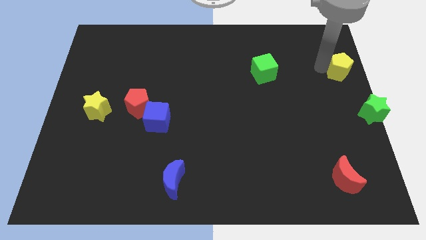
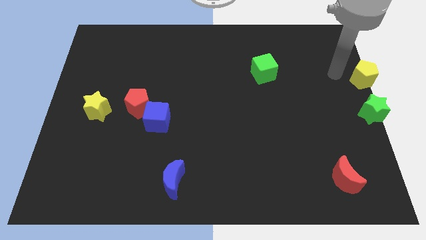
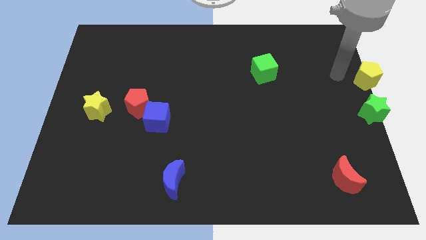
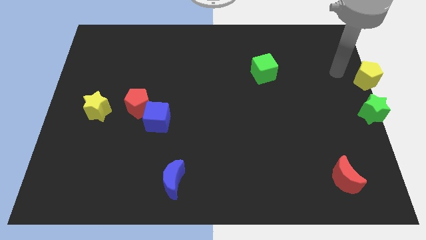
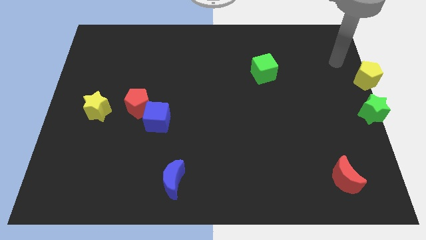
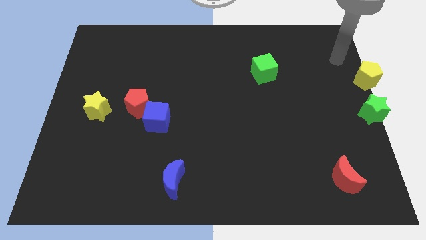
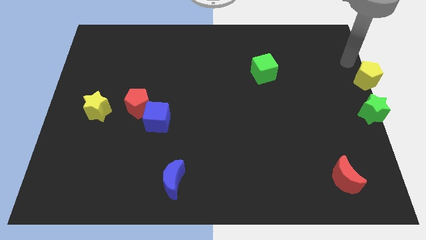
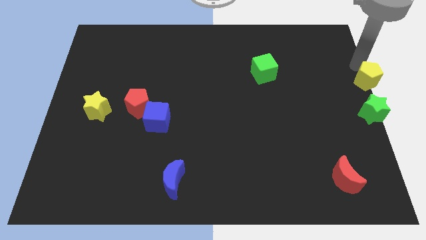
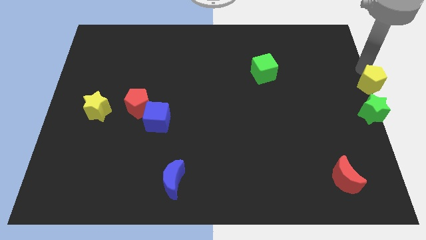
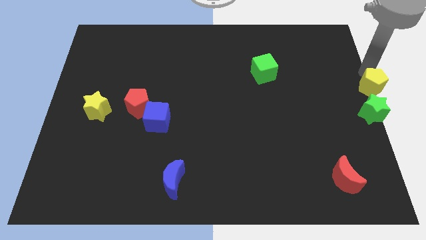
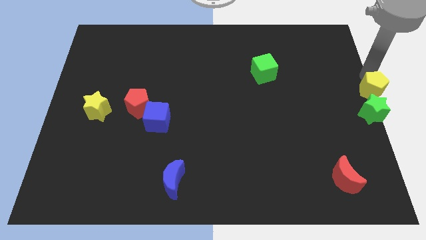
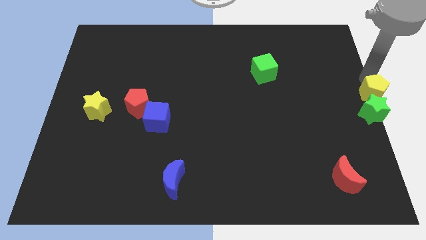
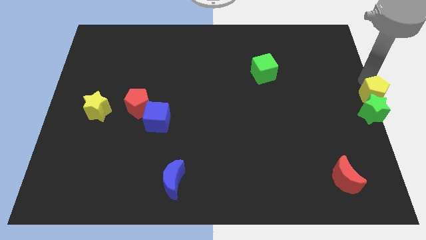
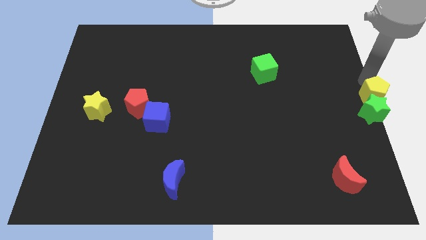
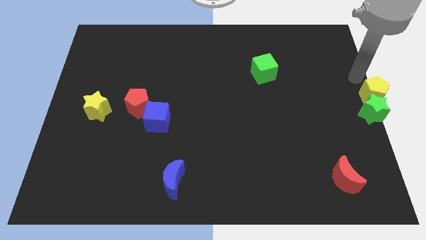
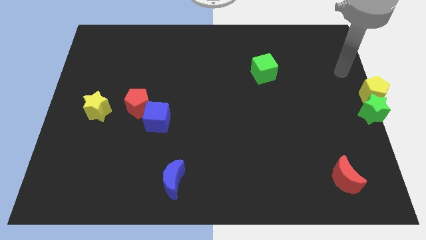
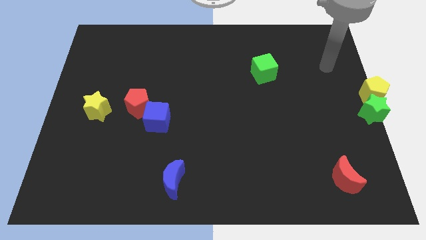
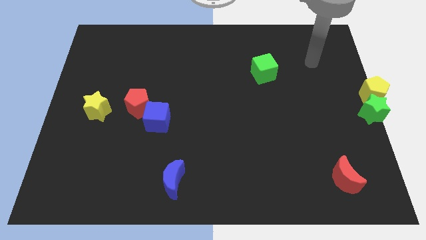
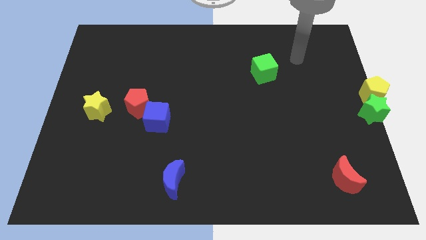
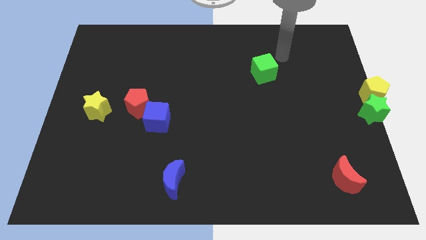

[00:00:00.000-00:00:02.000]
push the yellow pentagon into the green star

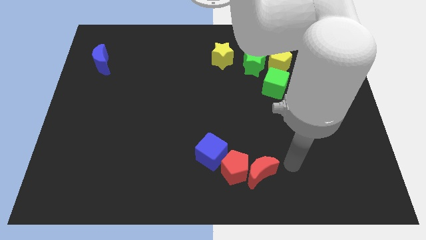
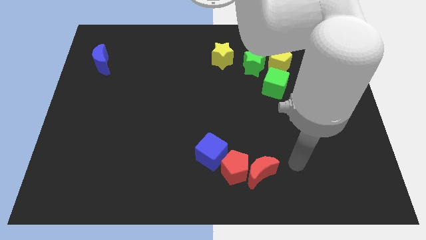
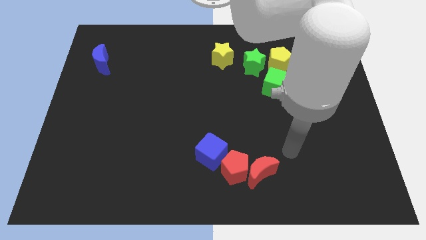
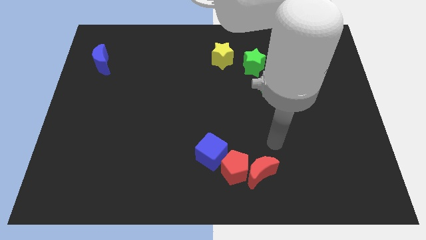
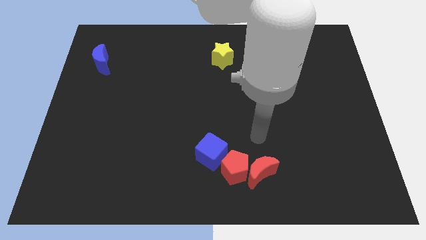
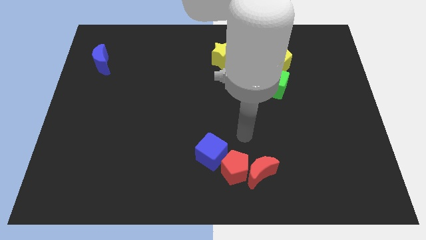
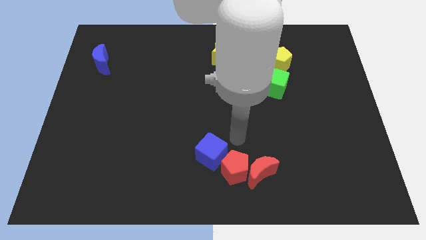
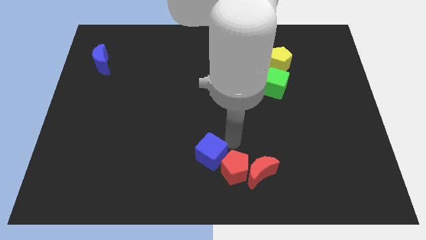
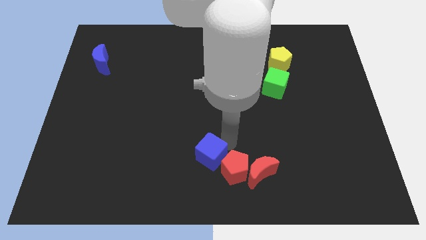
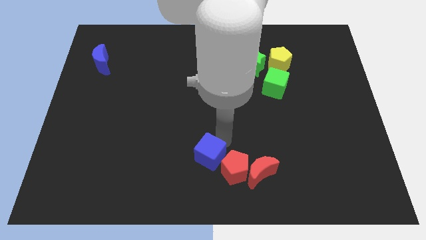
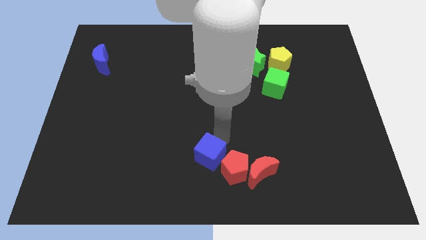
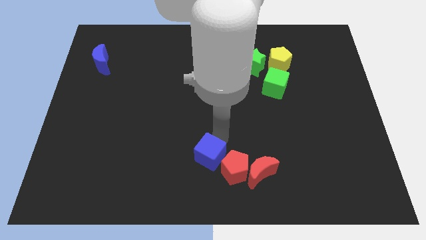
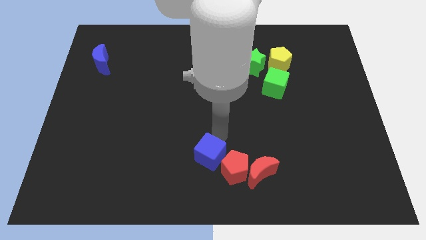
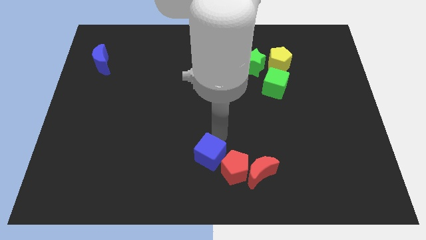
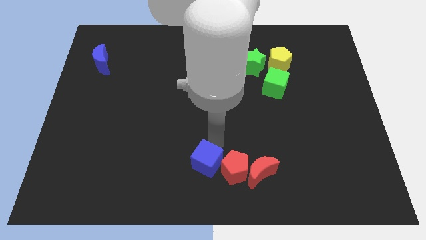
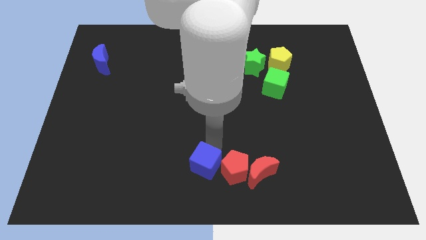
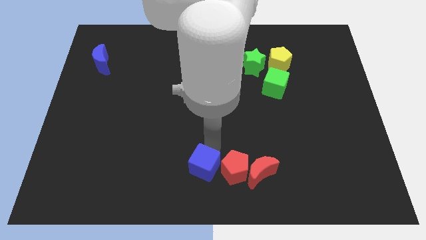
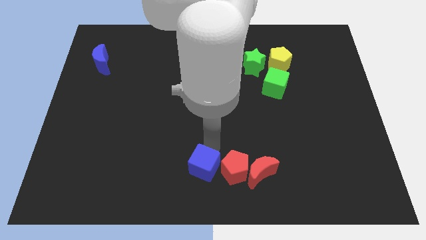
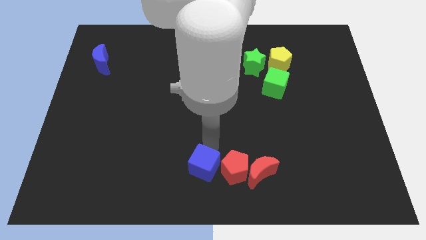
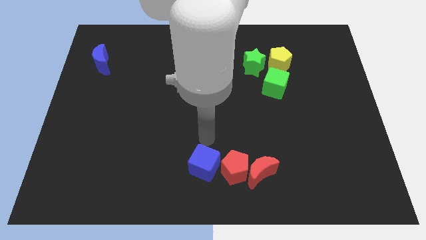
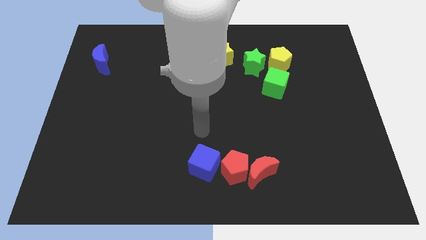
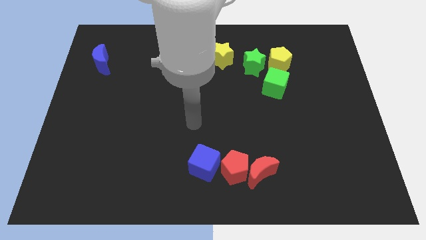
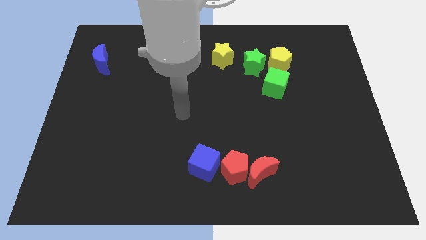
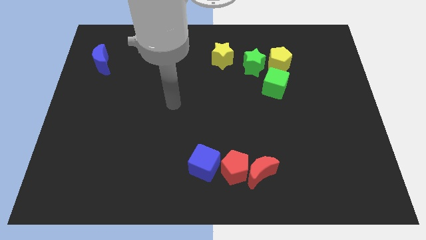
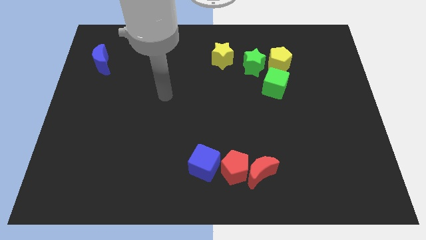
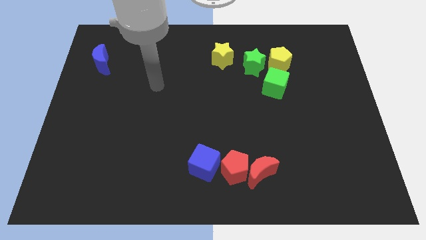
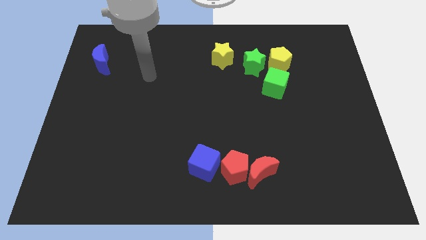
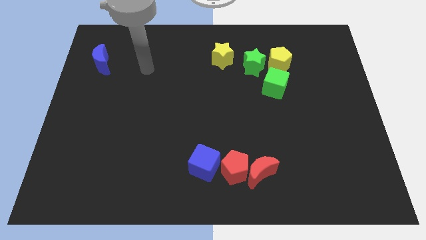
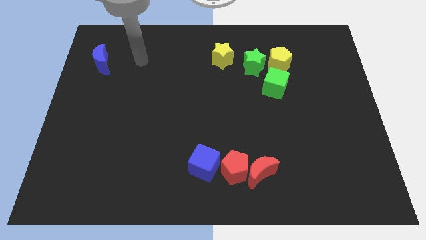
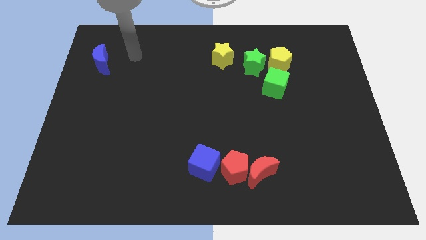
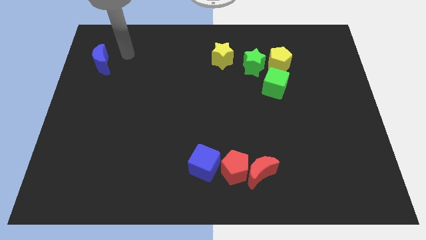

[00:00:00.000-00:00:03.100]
tap the blue cube slightly

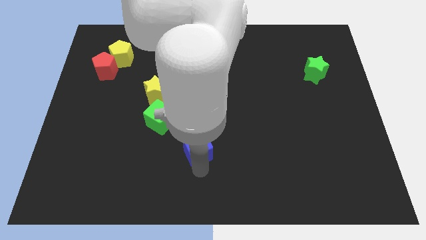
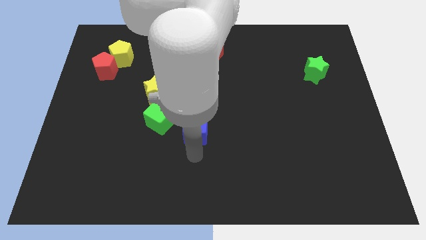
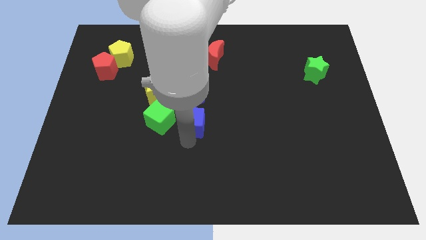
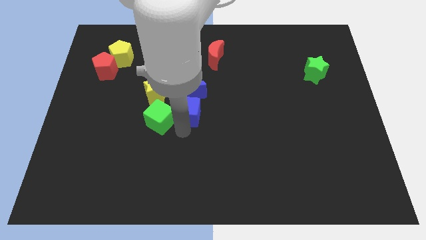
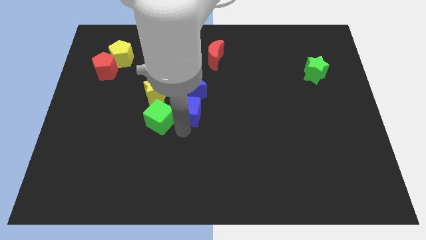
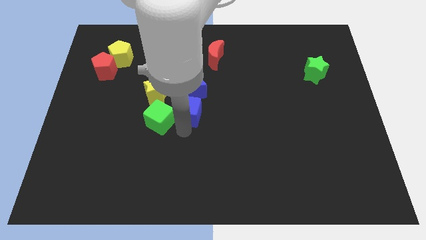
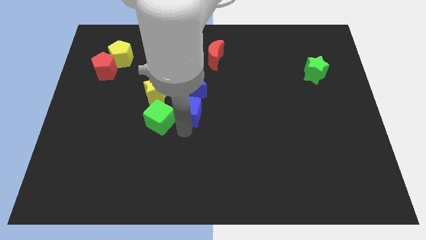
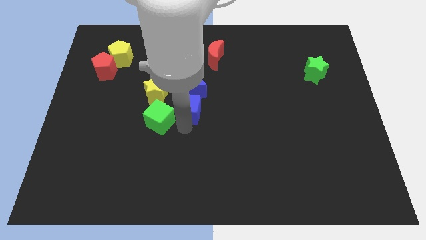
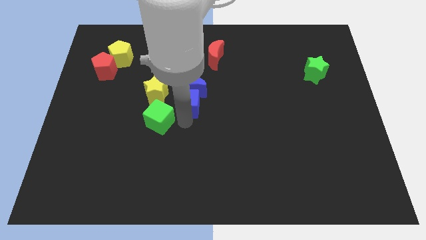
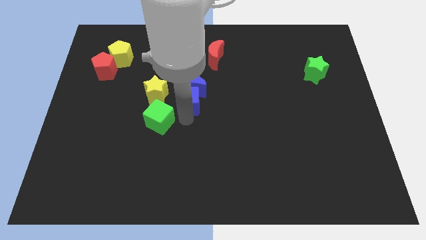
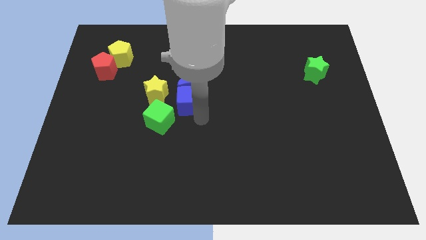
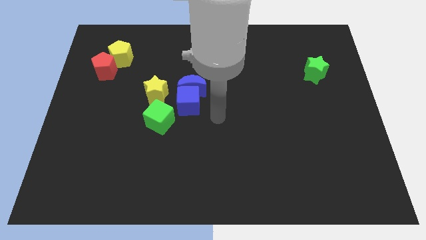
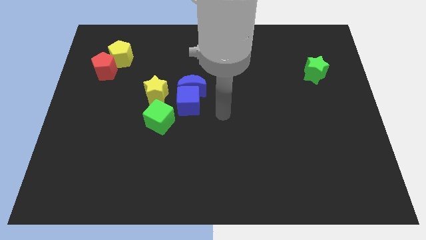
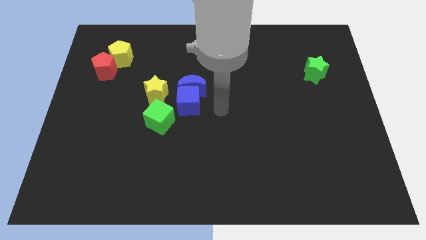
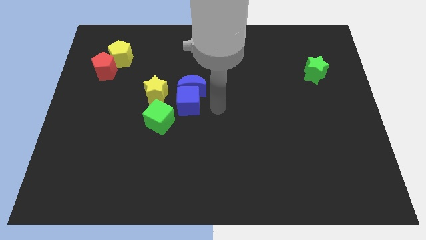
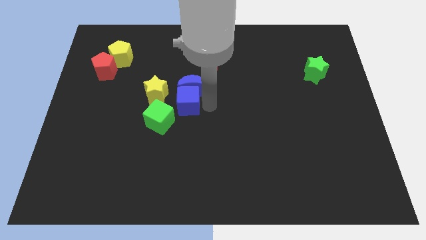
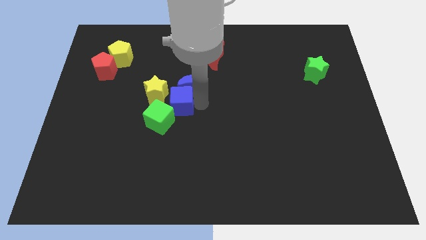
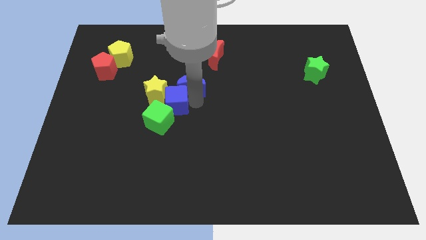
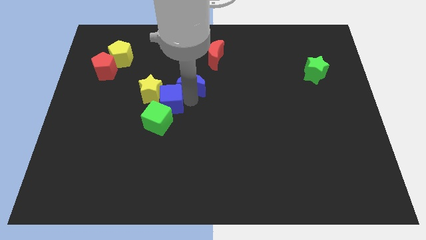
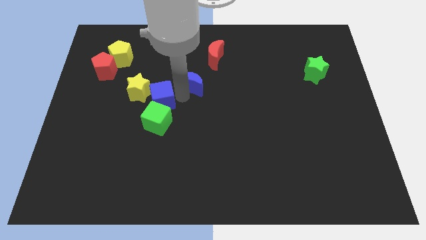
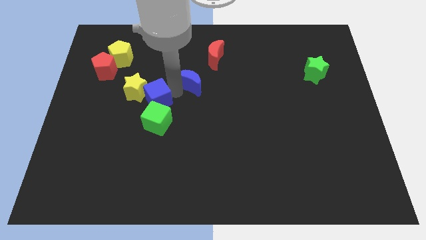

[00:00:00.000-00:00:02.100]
push the blue cube and blue crescent together towards the right of the yellow star

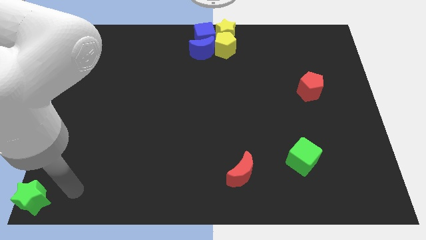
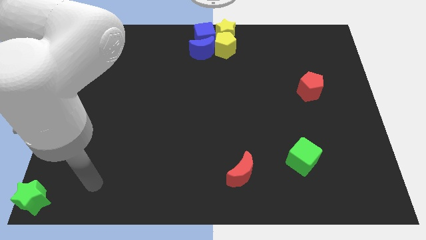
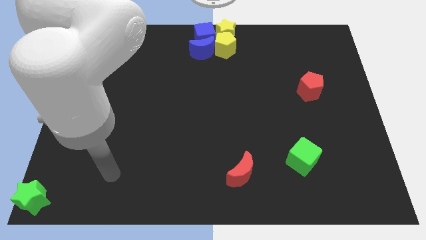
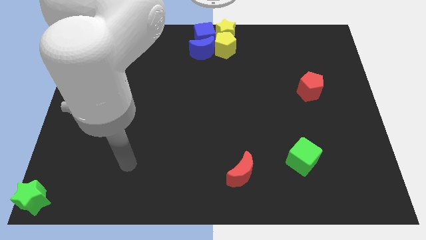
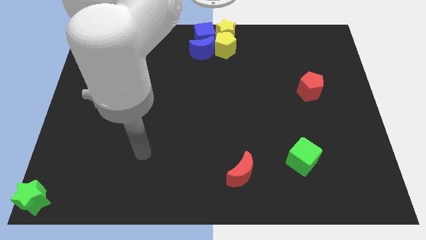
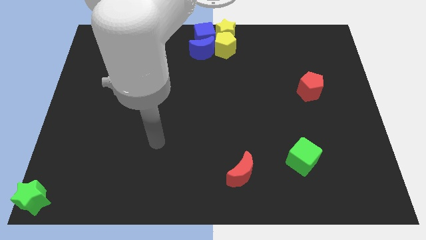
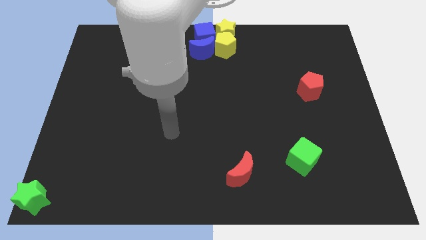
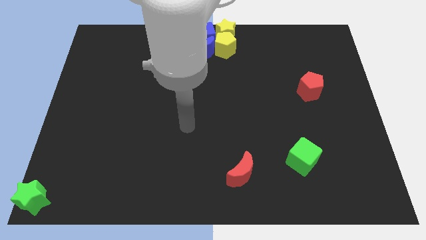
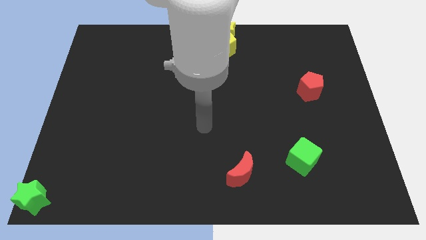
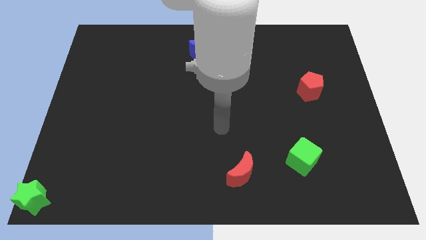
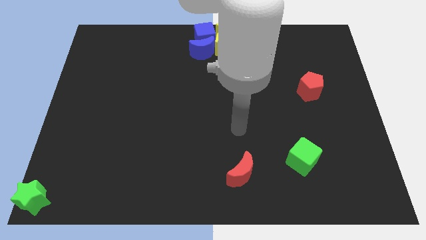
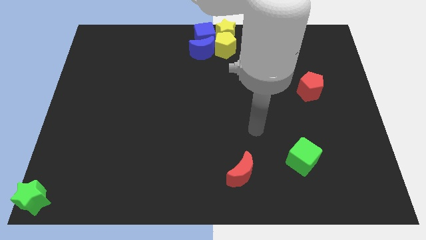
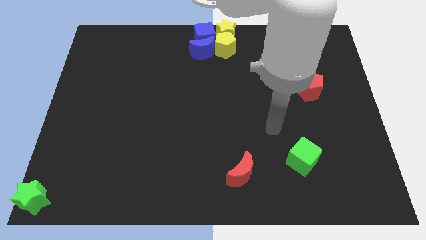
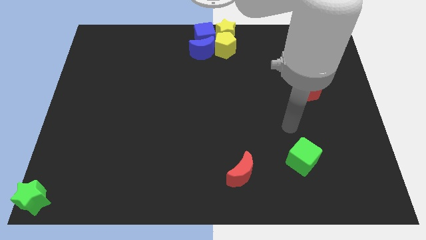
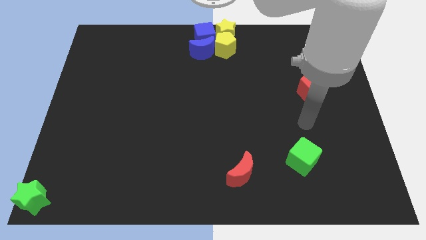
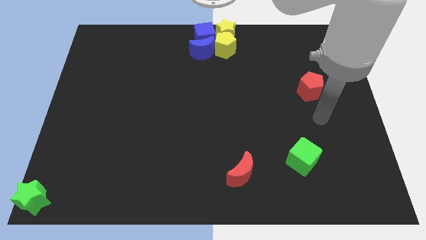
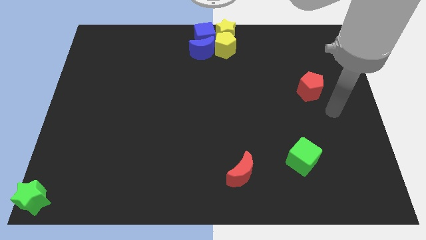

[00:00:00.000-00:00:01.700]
move your arm in the empty space

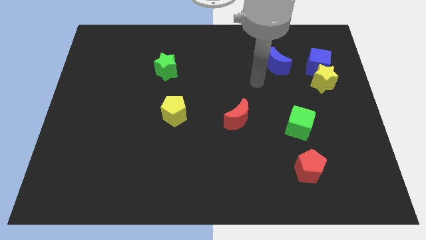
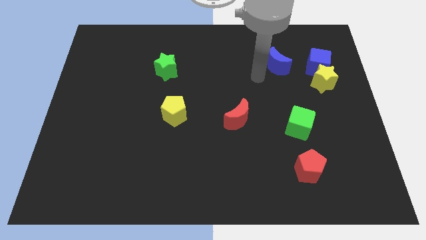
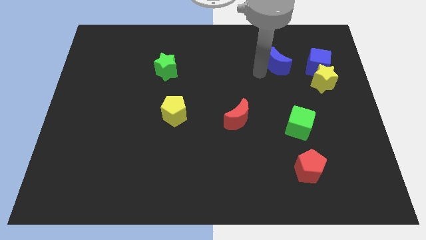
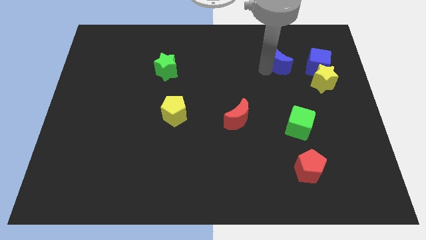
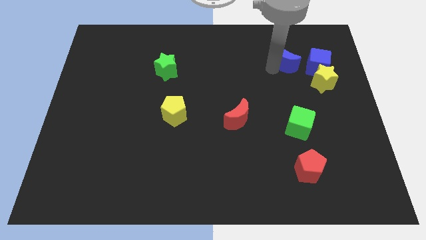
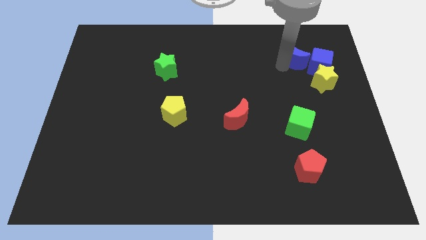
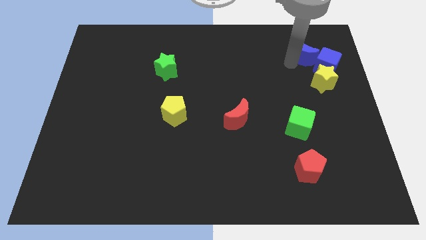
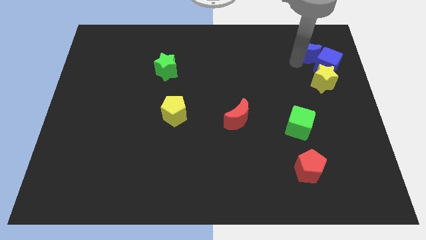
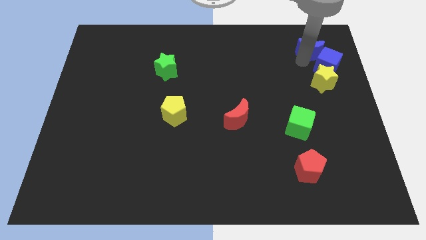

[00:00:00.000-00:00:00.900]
push blue crescent into the blue cube
